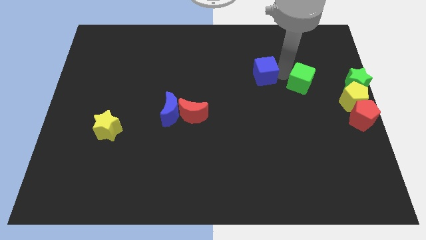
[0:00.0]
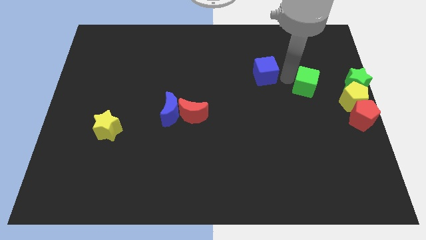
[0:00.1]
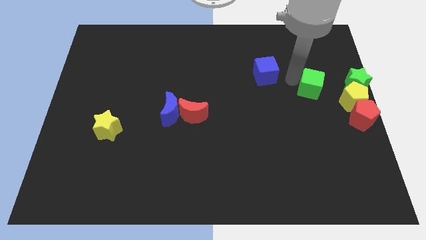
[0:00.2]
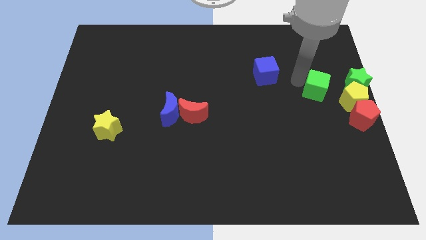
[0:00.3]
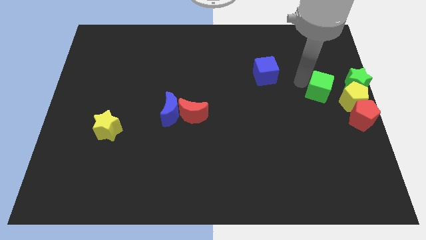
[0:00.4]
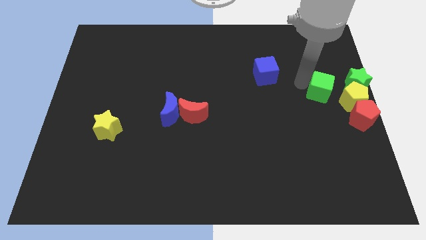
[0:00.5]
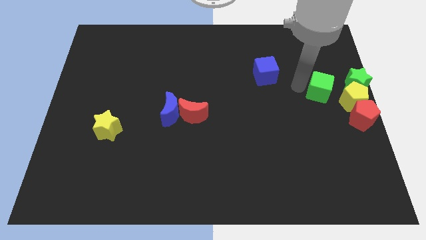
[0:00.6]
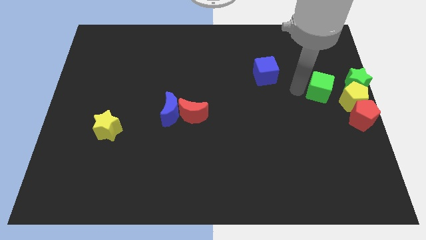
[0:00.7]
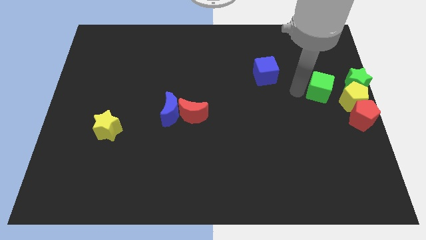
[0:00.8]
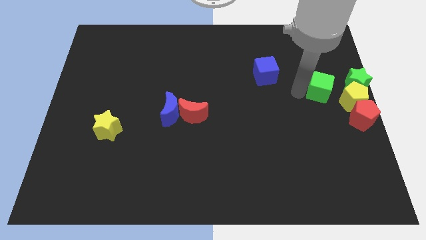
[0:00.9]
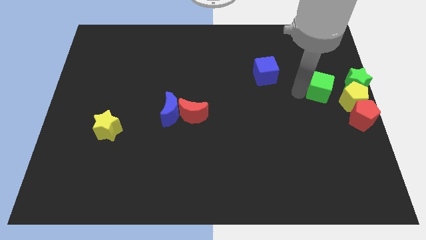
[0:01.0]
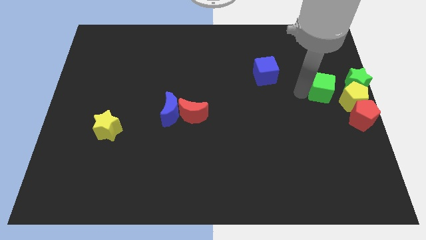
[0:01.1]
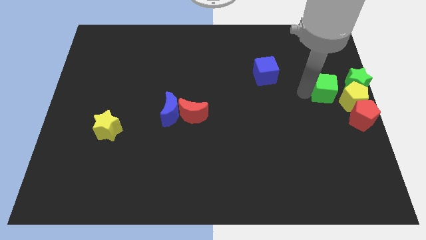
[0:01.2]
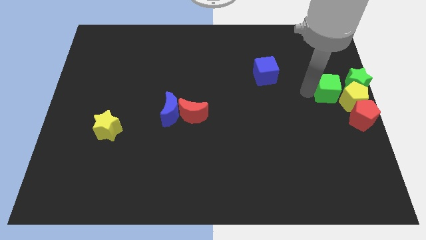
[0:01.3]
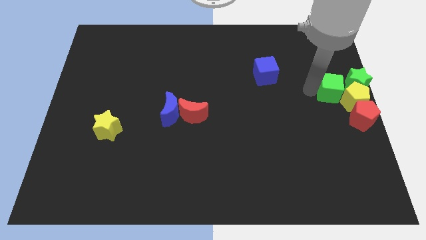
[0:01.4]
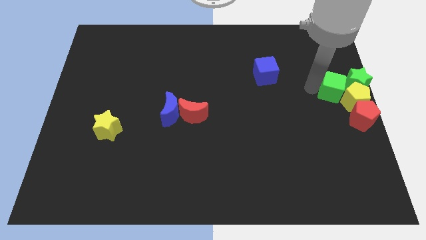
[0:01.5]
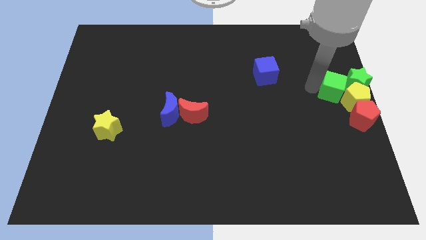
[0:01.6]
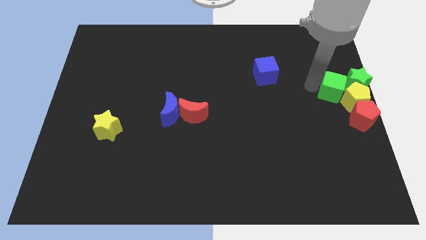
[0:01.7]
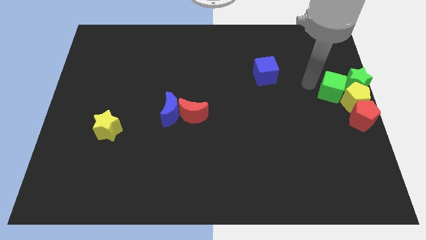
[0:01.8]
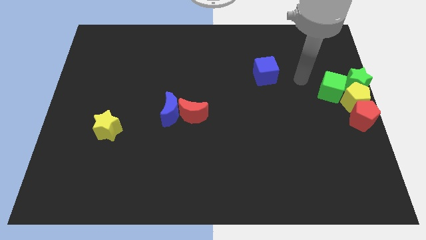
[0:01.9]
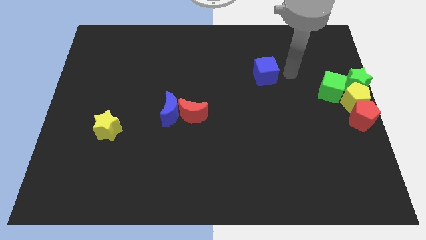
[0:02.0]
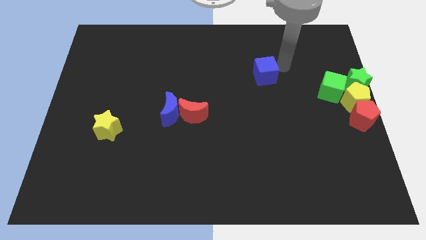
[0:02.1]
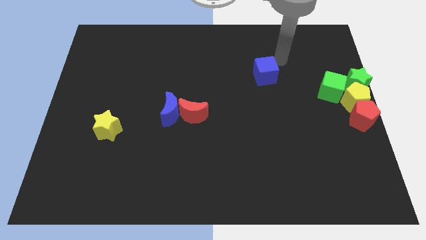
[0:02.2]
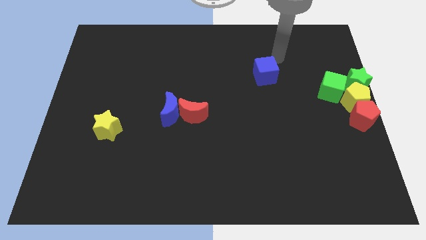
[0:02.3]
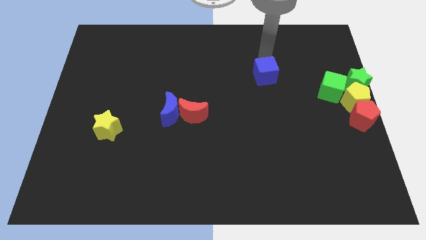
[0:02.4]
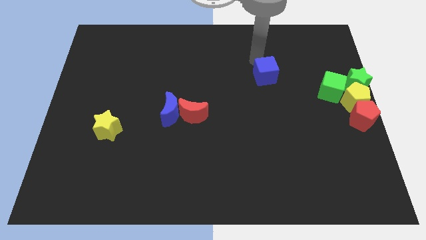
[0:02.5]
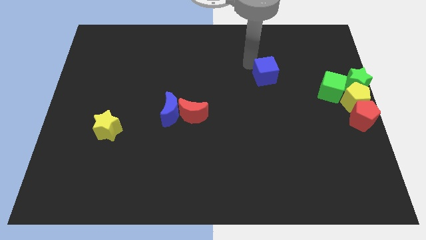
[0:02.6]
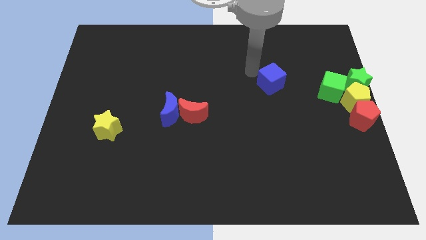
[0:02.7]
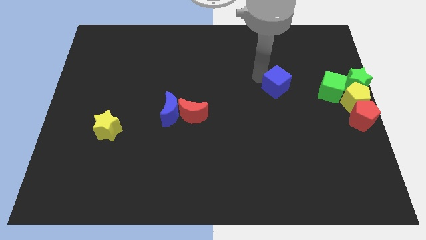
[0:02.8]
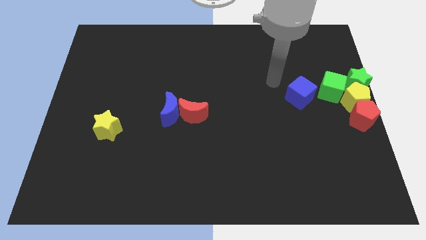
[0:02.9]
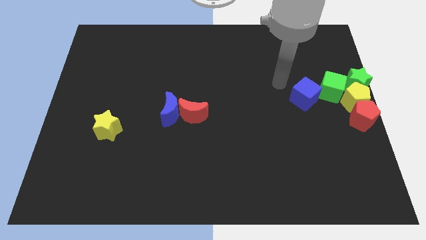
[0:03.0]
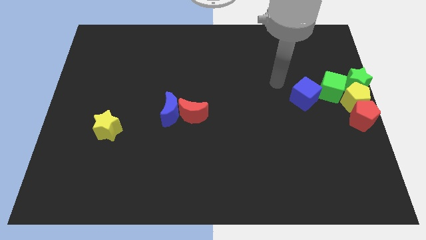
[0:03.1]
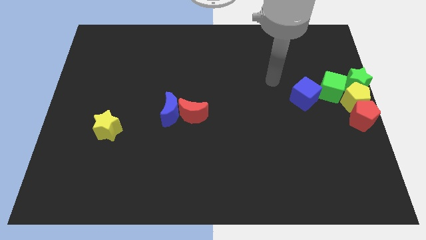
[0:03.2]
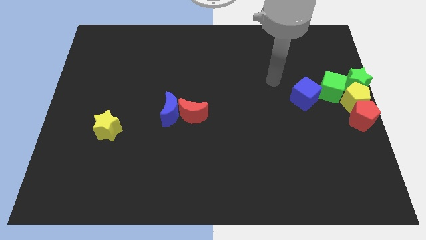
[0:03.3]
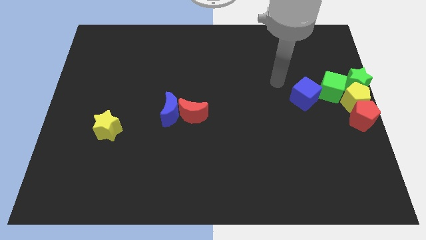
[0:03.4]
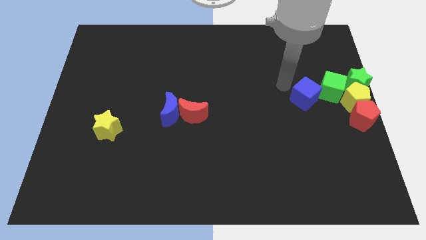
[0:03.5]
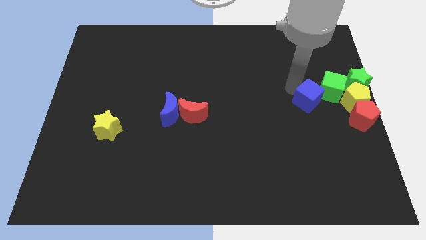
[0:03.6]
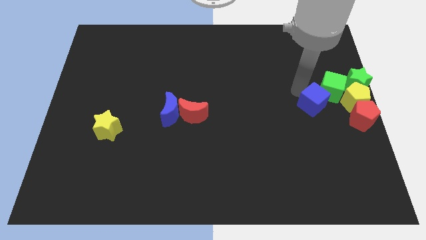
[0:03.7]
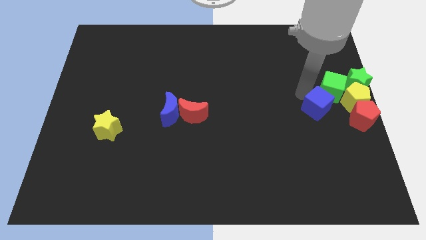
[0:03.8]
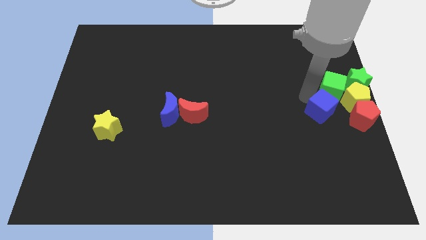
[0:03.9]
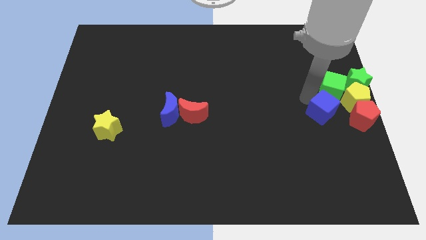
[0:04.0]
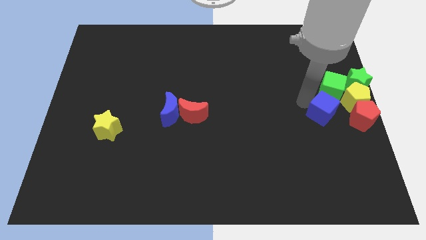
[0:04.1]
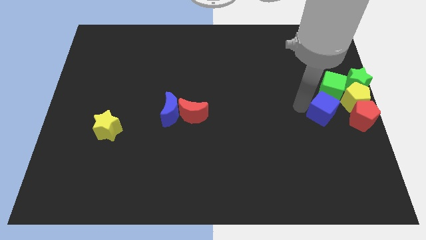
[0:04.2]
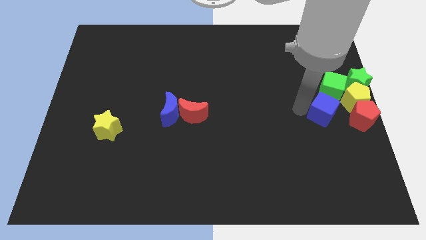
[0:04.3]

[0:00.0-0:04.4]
move the cubes to the left of the pentagons

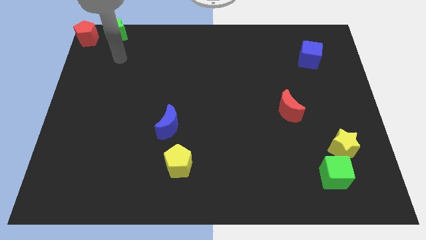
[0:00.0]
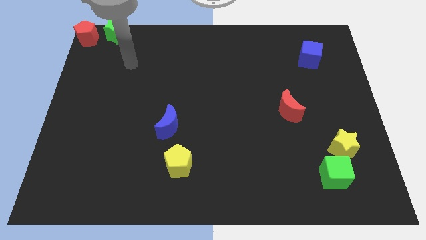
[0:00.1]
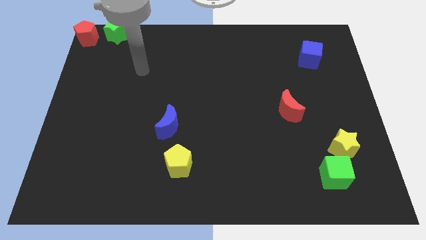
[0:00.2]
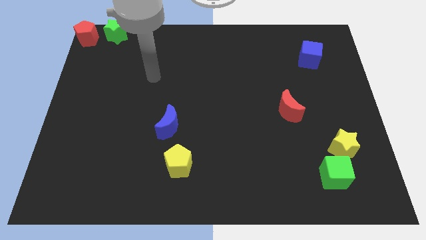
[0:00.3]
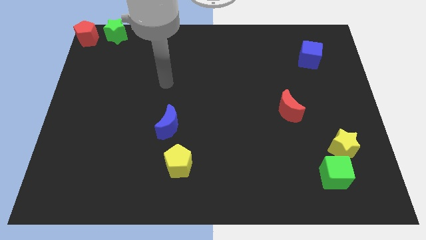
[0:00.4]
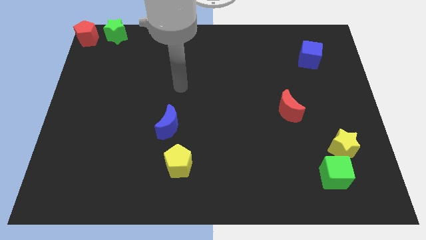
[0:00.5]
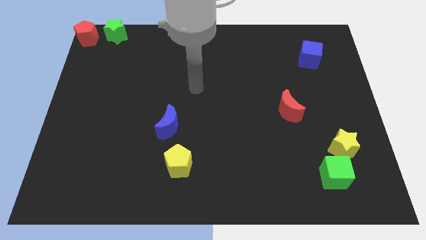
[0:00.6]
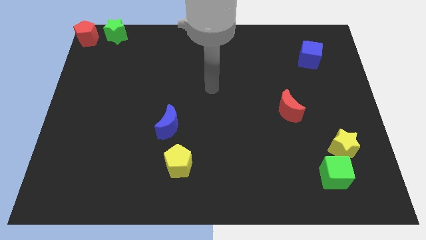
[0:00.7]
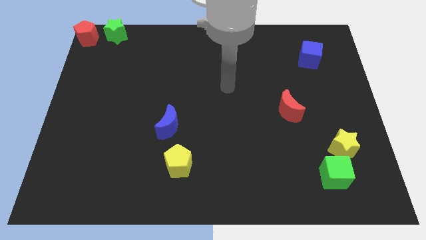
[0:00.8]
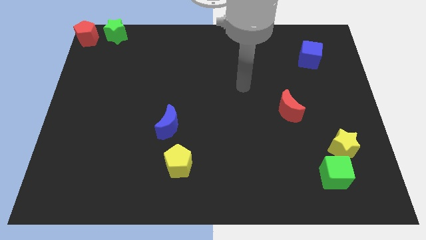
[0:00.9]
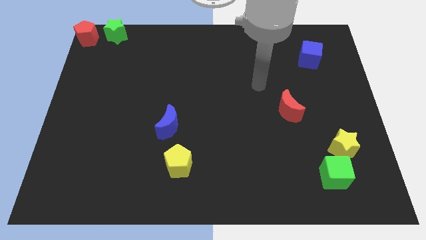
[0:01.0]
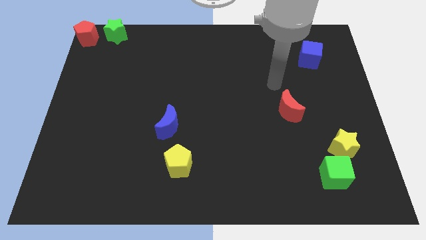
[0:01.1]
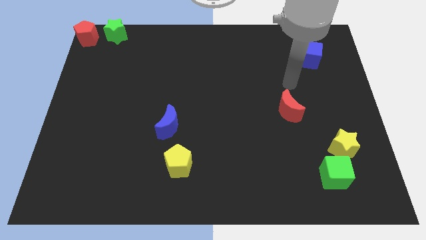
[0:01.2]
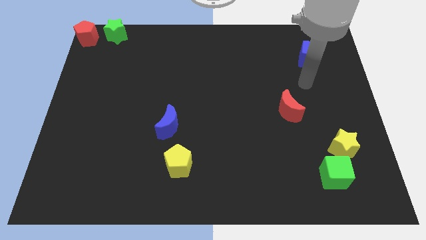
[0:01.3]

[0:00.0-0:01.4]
place your arm in between the red crescent and blue cube

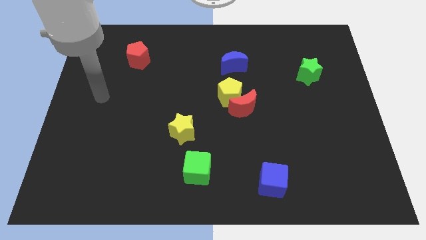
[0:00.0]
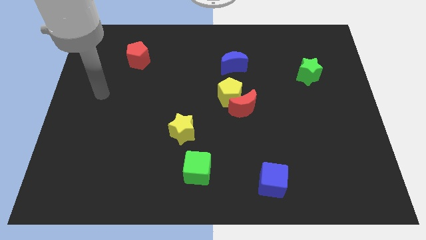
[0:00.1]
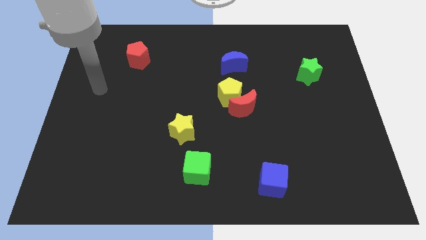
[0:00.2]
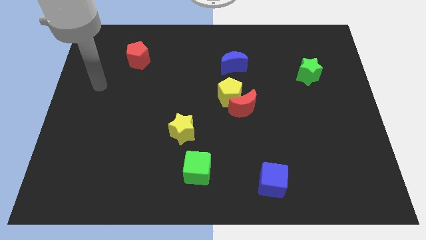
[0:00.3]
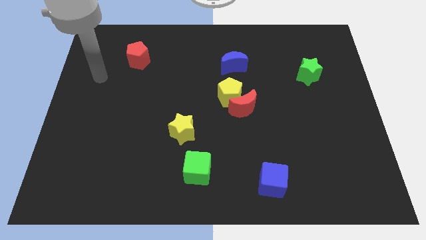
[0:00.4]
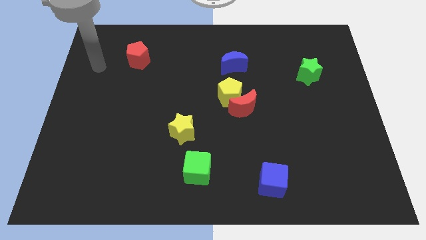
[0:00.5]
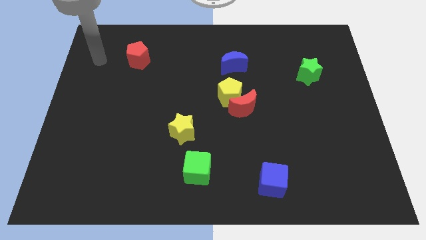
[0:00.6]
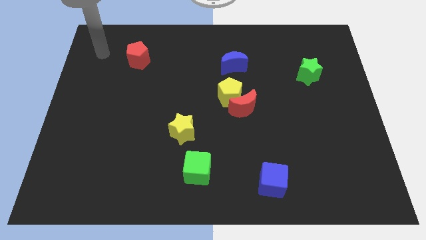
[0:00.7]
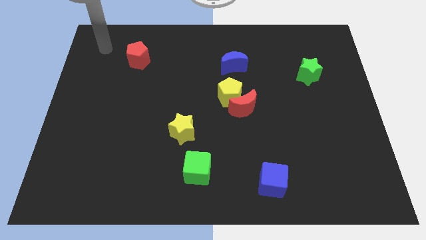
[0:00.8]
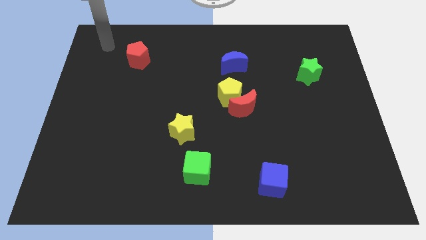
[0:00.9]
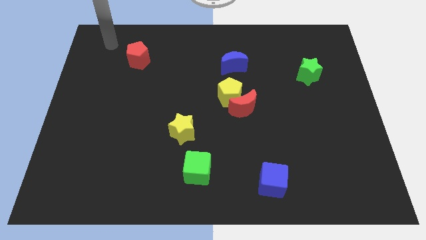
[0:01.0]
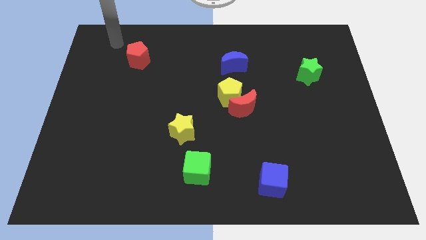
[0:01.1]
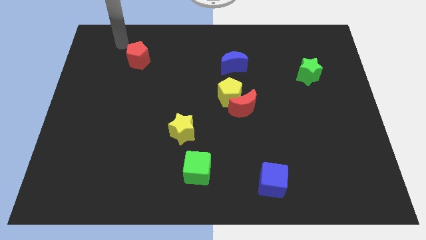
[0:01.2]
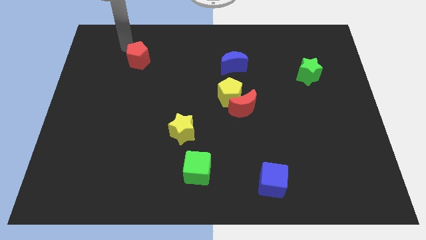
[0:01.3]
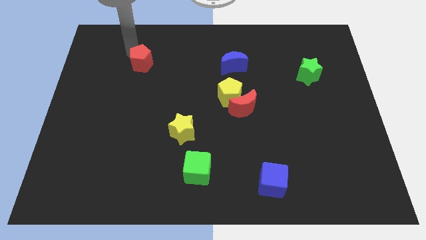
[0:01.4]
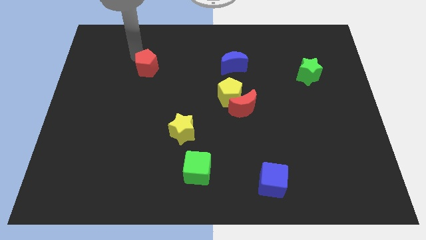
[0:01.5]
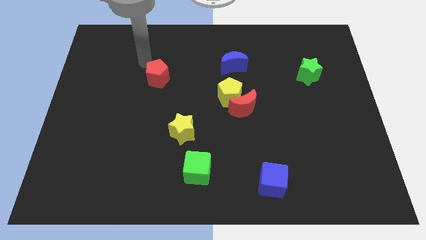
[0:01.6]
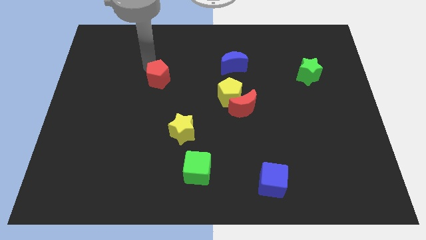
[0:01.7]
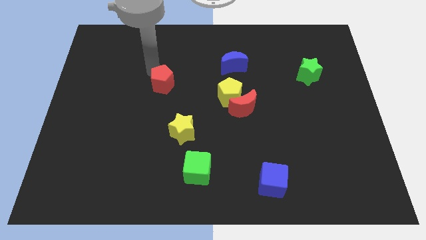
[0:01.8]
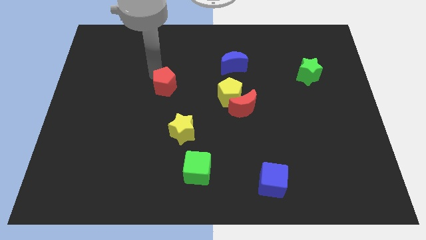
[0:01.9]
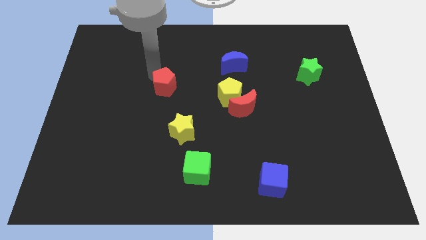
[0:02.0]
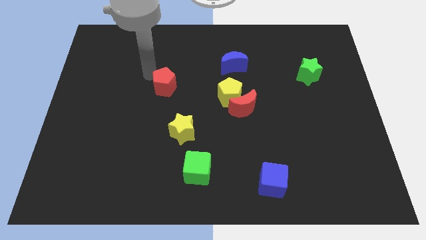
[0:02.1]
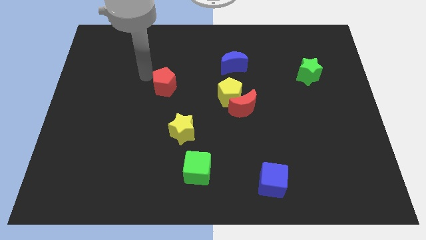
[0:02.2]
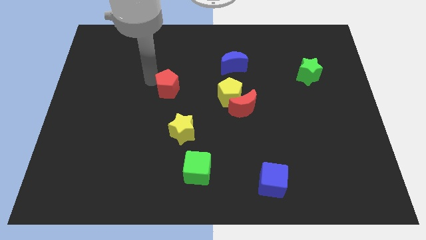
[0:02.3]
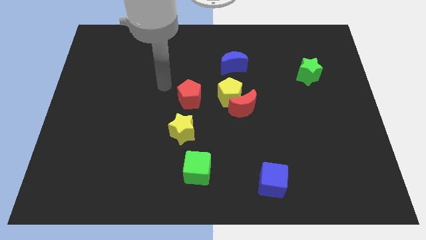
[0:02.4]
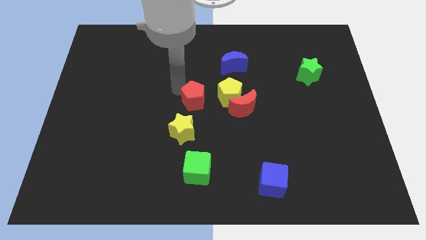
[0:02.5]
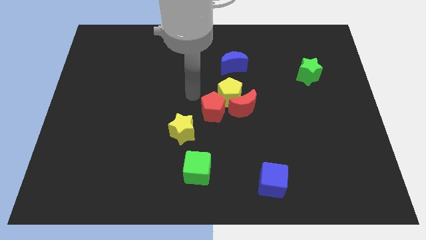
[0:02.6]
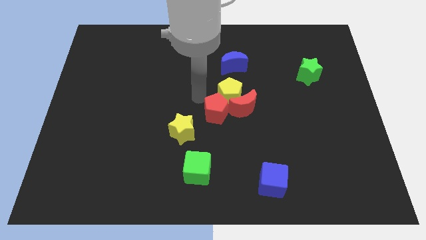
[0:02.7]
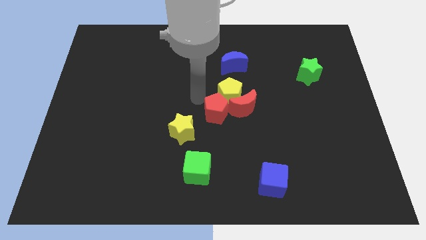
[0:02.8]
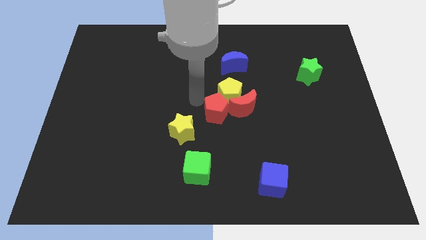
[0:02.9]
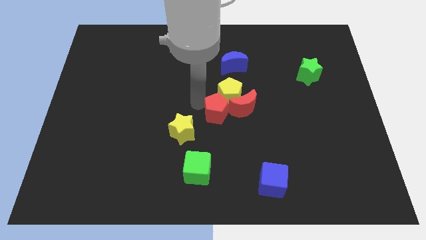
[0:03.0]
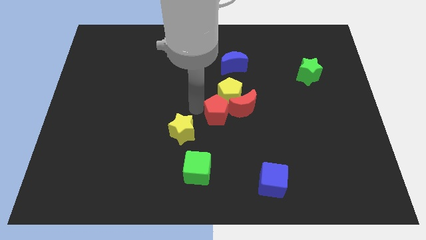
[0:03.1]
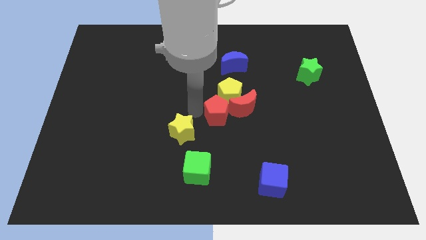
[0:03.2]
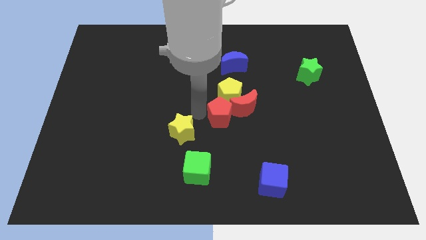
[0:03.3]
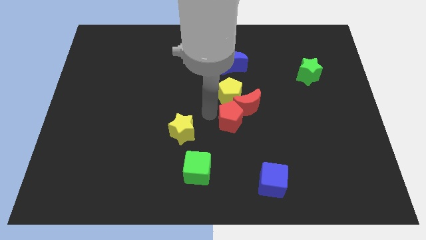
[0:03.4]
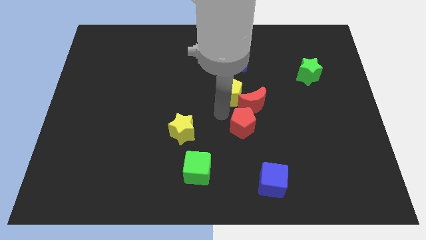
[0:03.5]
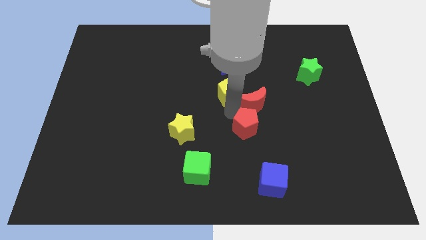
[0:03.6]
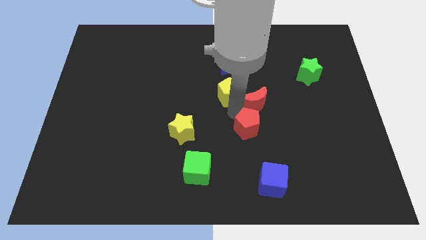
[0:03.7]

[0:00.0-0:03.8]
push red pentagon below red moon
